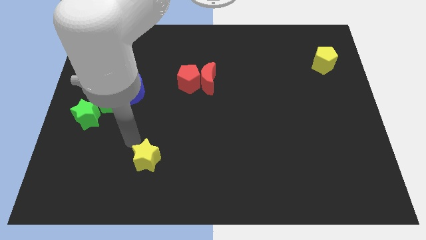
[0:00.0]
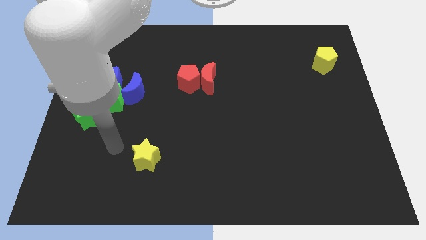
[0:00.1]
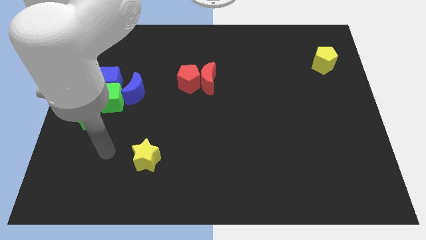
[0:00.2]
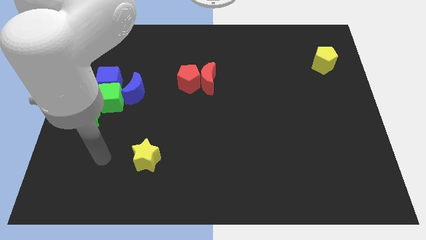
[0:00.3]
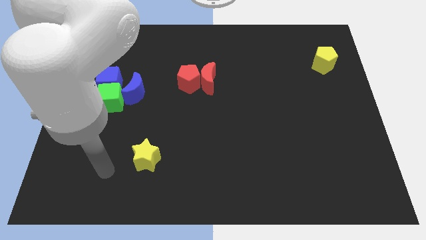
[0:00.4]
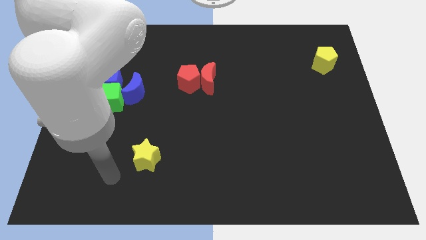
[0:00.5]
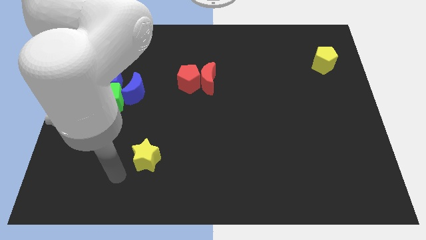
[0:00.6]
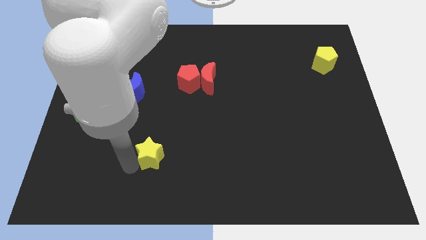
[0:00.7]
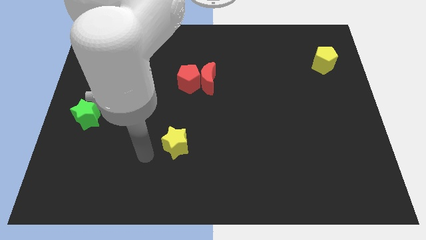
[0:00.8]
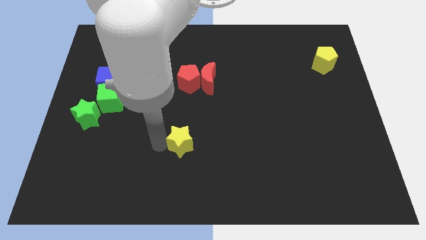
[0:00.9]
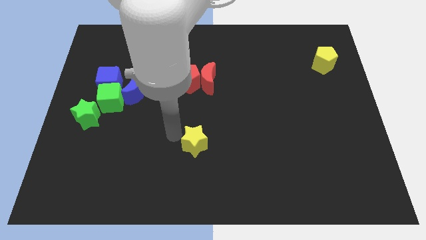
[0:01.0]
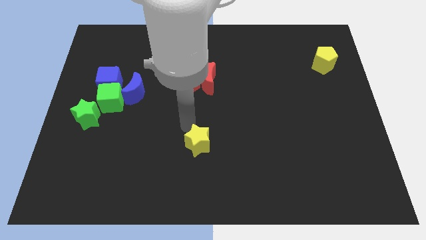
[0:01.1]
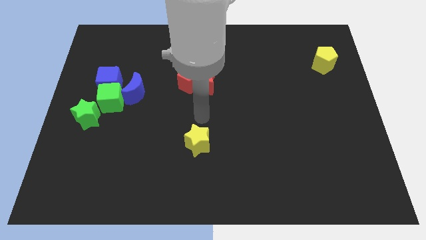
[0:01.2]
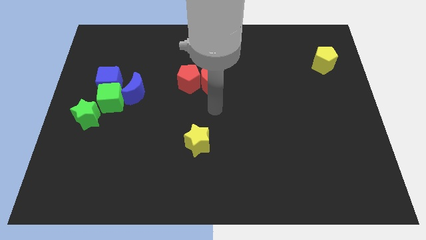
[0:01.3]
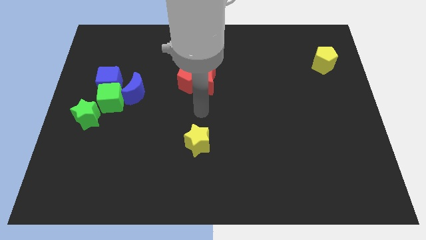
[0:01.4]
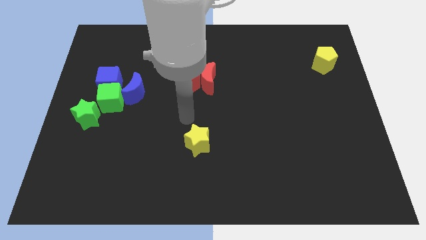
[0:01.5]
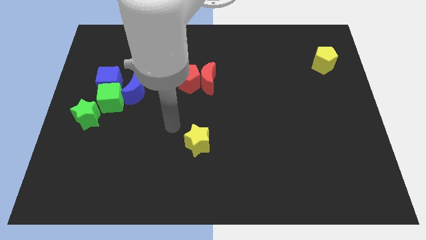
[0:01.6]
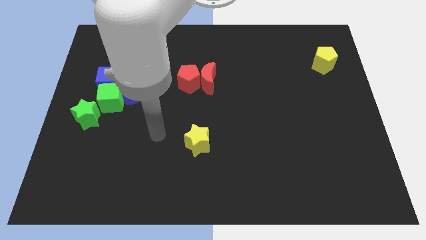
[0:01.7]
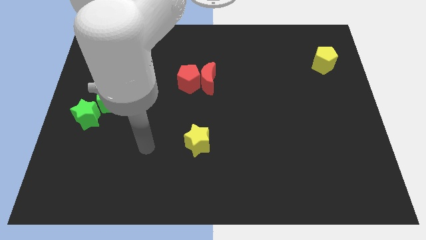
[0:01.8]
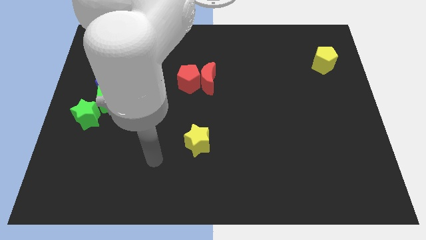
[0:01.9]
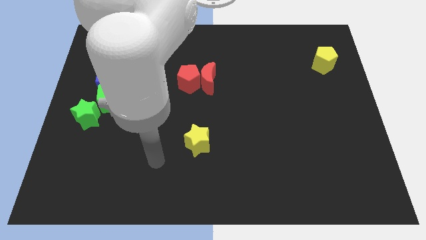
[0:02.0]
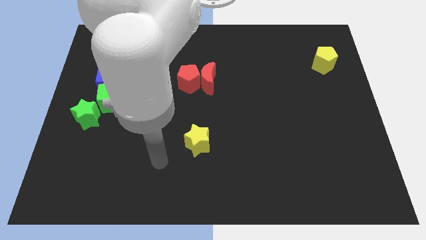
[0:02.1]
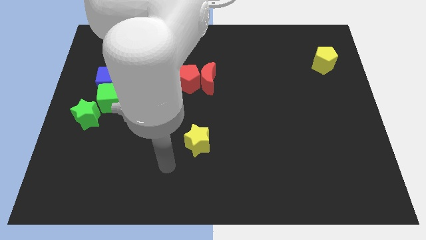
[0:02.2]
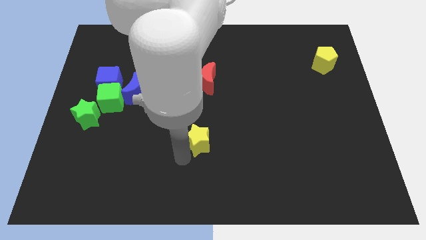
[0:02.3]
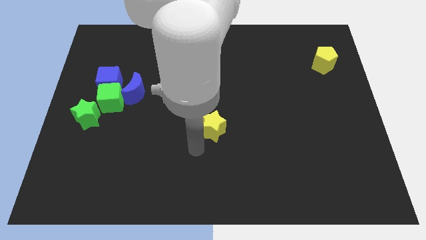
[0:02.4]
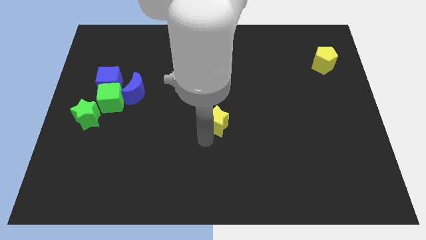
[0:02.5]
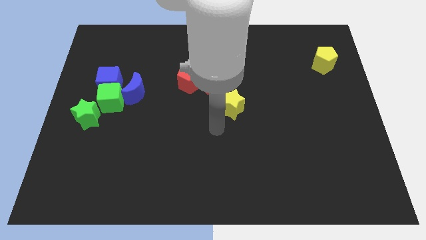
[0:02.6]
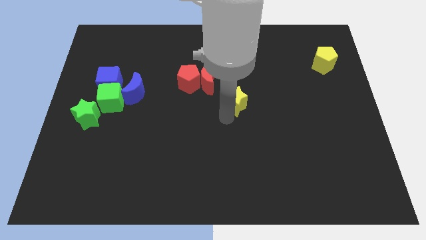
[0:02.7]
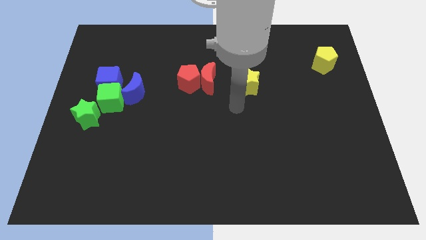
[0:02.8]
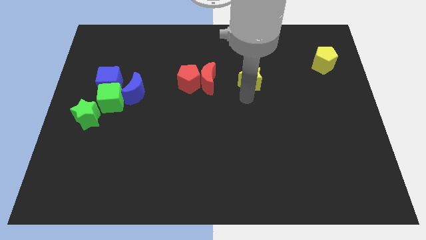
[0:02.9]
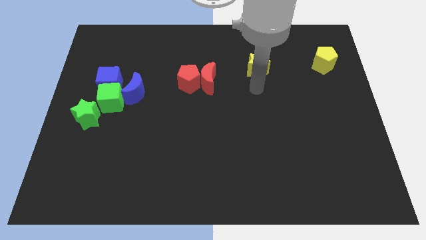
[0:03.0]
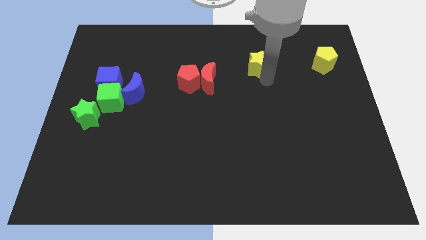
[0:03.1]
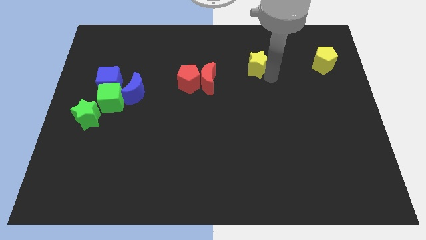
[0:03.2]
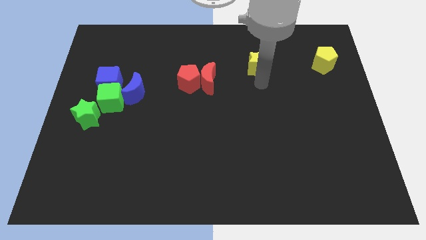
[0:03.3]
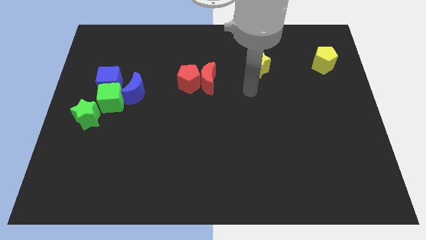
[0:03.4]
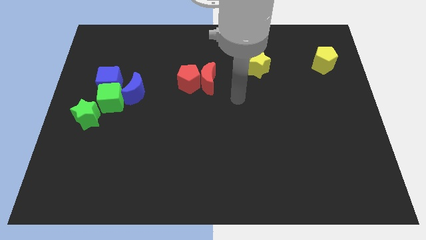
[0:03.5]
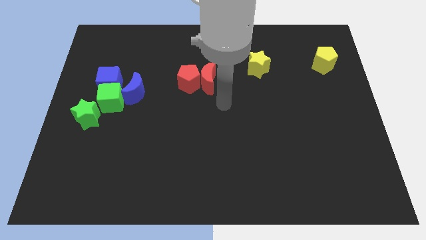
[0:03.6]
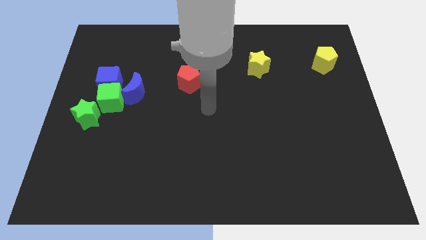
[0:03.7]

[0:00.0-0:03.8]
place the yellow star horizontally to the left side of the yellow pentagon

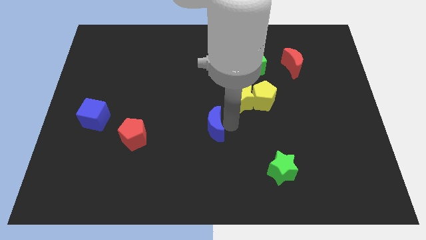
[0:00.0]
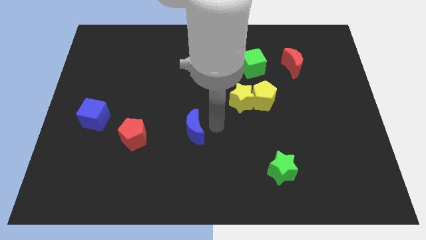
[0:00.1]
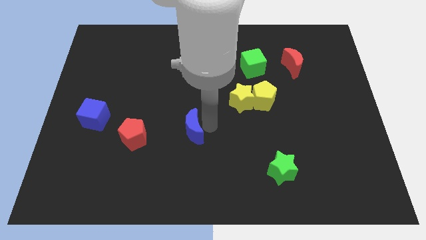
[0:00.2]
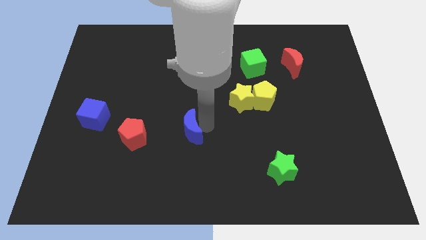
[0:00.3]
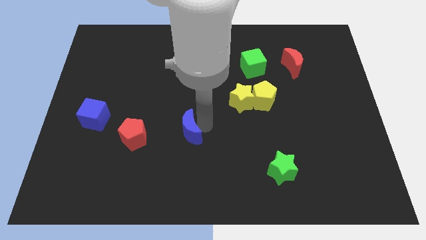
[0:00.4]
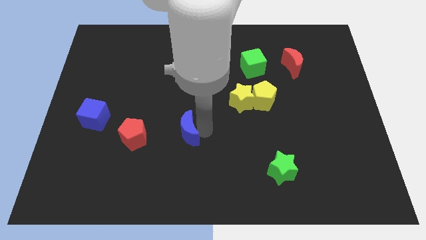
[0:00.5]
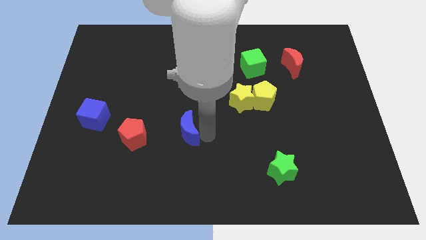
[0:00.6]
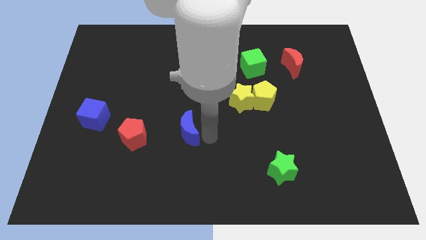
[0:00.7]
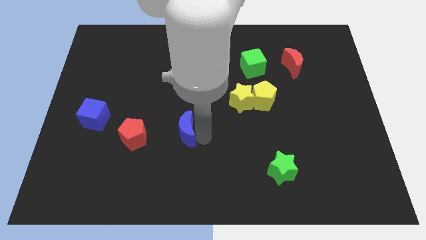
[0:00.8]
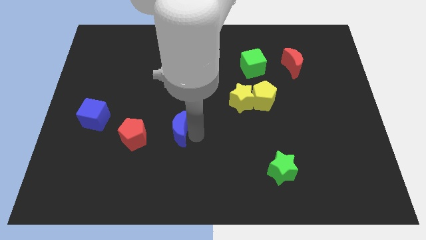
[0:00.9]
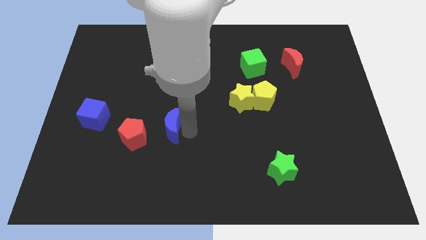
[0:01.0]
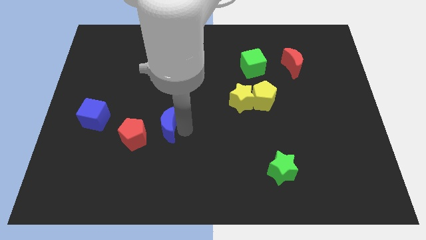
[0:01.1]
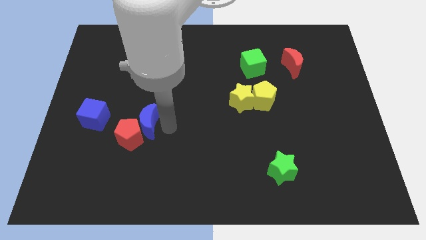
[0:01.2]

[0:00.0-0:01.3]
move the blue cube into the red pentagon

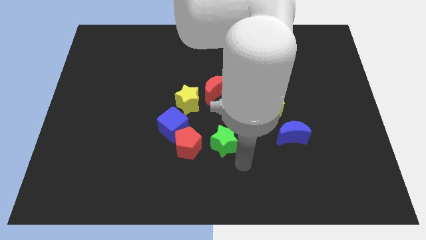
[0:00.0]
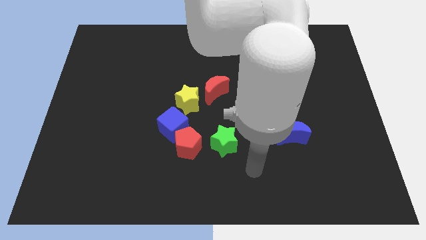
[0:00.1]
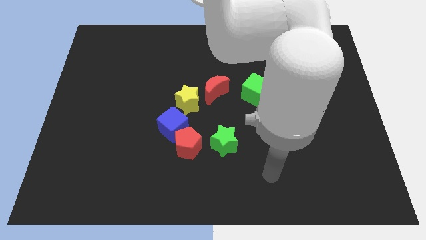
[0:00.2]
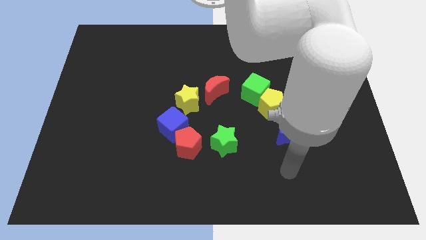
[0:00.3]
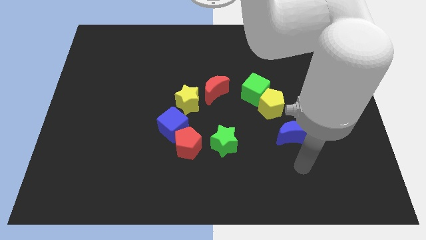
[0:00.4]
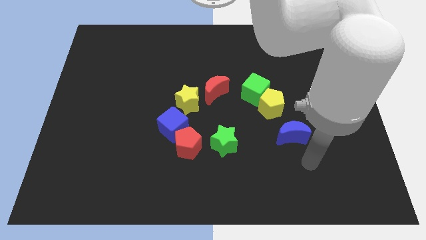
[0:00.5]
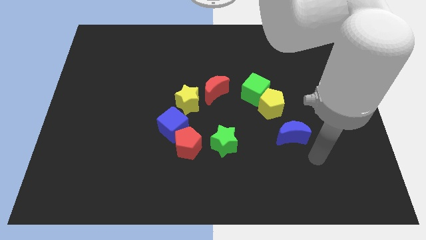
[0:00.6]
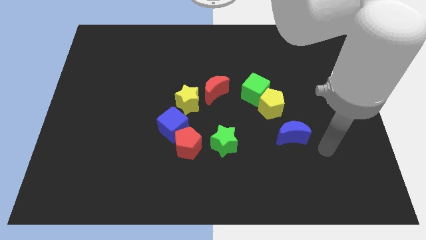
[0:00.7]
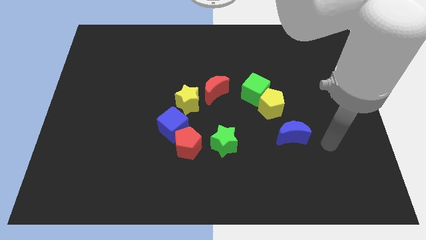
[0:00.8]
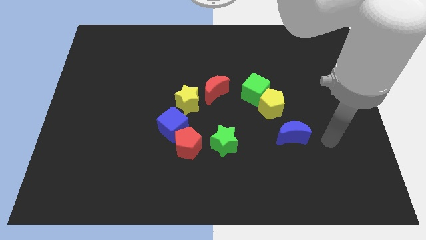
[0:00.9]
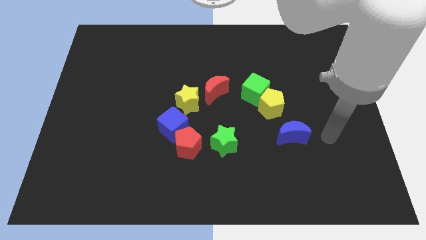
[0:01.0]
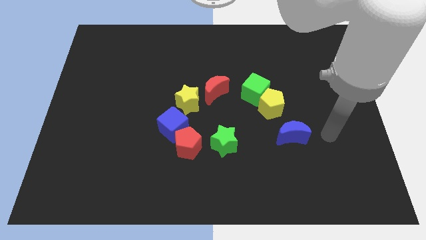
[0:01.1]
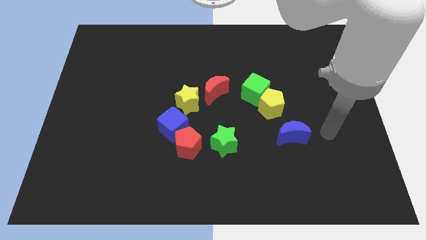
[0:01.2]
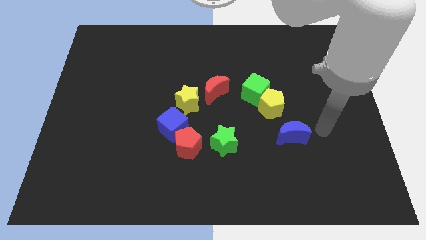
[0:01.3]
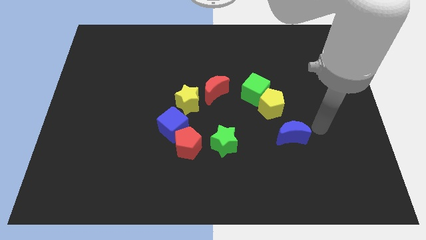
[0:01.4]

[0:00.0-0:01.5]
point your arm at the right of the blue crescent

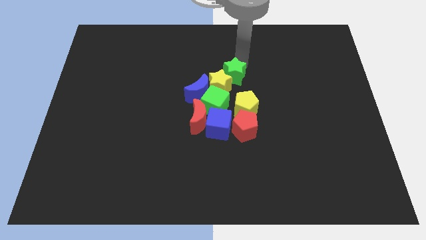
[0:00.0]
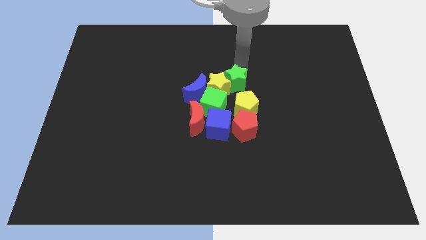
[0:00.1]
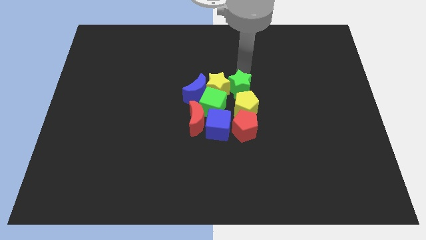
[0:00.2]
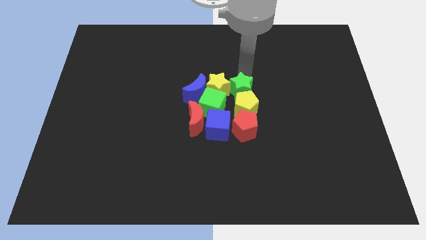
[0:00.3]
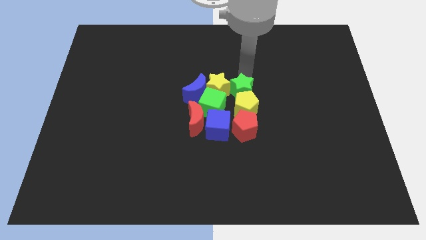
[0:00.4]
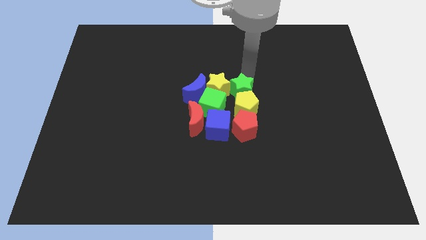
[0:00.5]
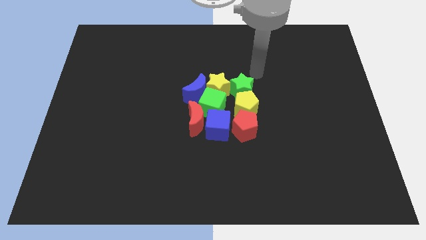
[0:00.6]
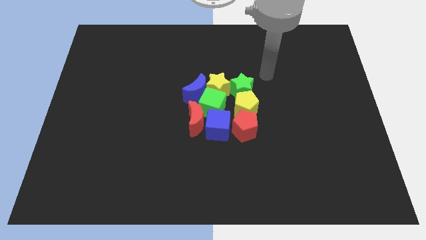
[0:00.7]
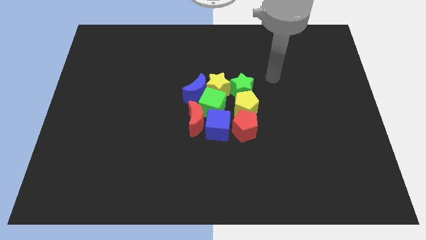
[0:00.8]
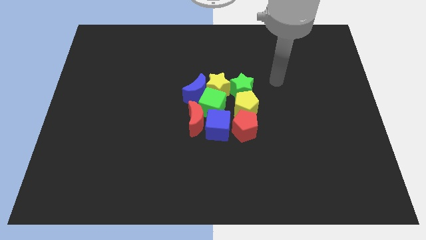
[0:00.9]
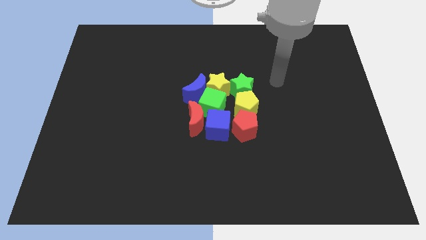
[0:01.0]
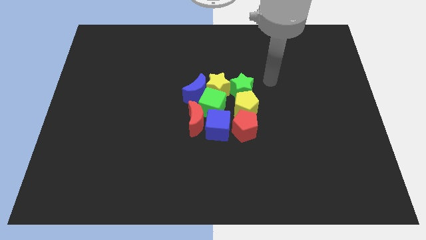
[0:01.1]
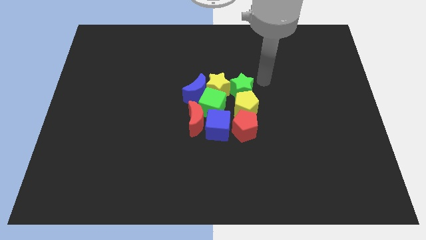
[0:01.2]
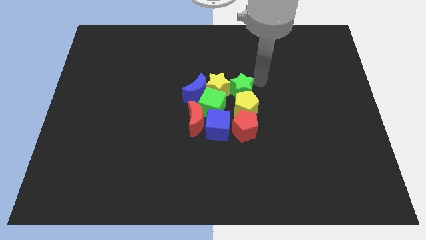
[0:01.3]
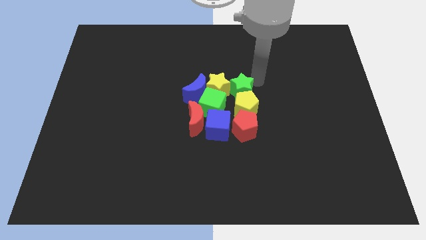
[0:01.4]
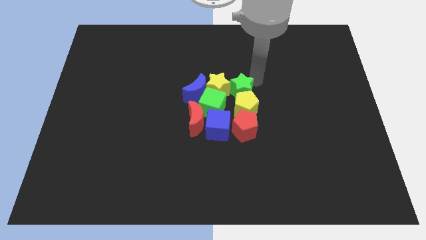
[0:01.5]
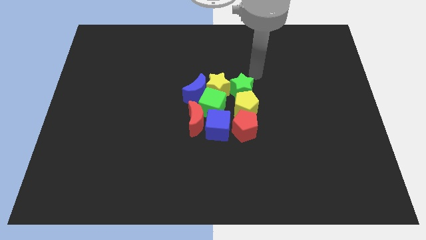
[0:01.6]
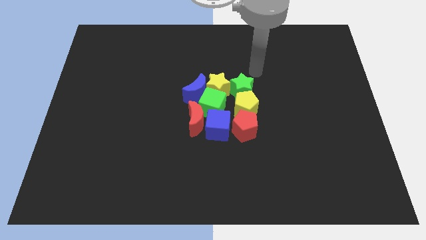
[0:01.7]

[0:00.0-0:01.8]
place the arm diagonally to the green star

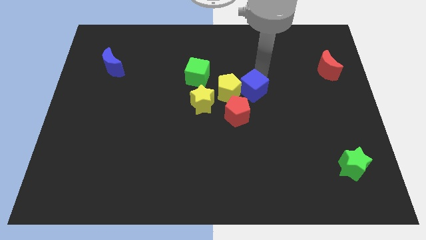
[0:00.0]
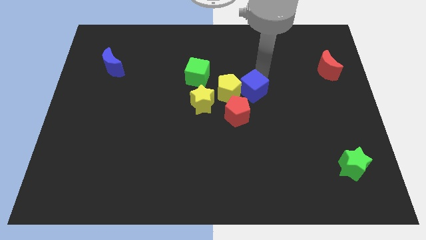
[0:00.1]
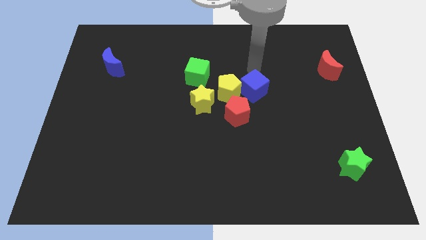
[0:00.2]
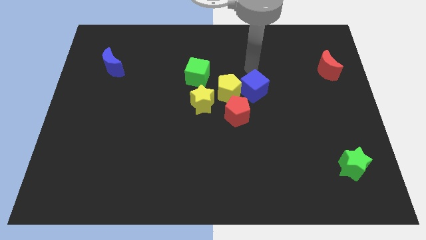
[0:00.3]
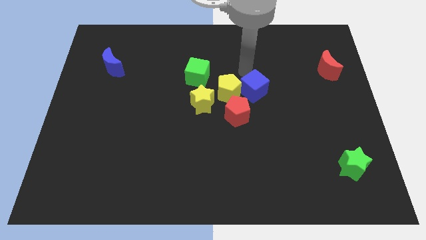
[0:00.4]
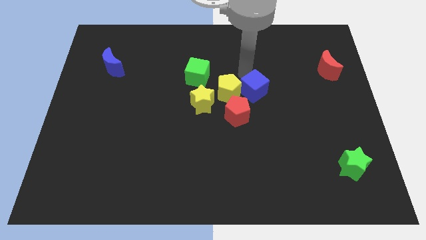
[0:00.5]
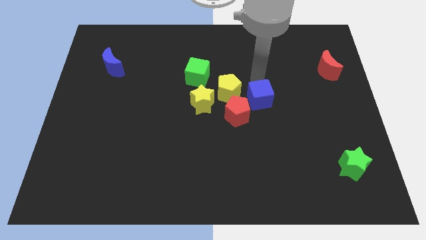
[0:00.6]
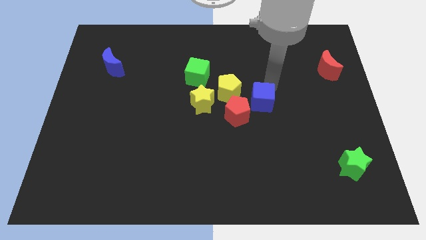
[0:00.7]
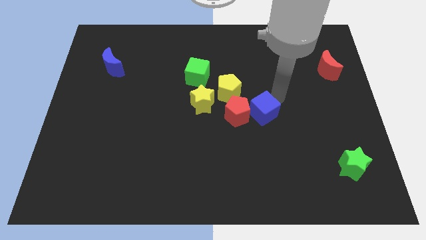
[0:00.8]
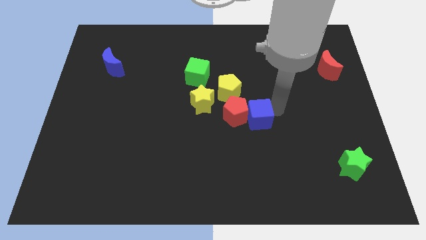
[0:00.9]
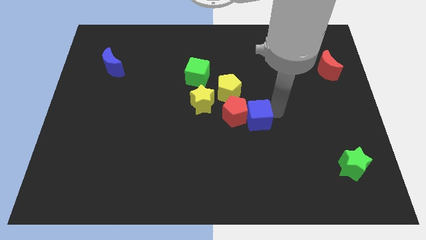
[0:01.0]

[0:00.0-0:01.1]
move the blue cube to the right of the yellow pentagon
